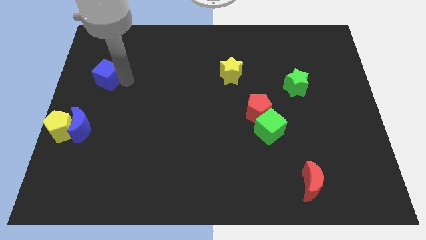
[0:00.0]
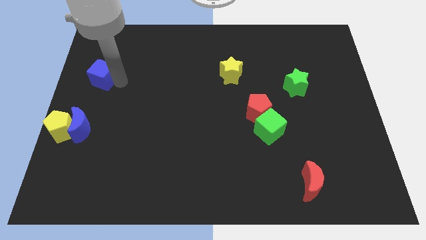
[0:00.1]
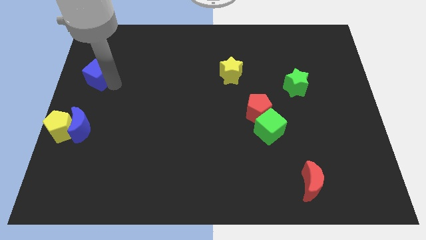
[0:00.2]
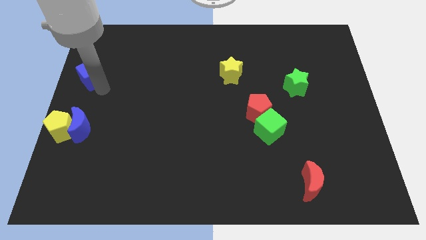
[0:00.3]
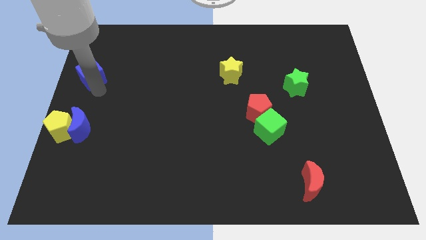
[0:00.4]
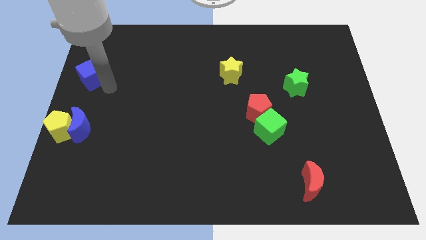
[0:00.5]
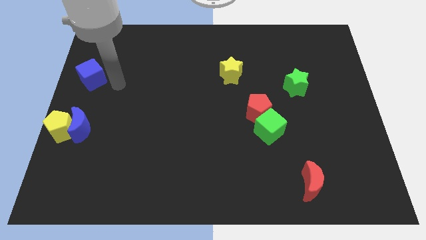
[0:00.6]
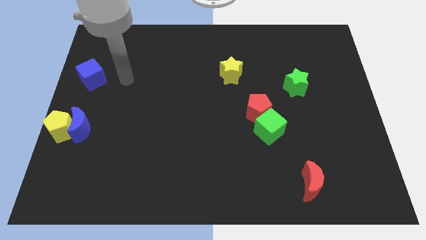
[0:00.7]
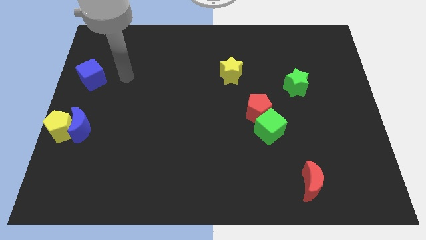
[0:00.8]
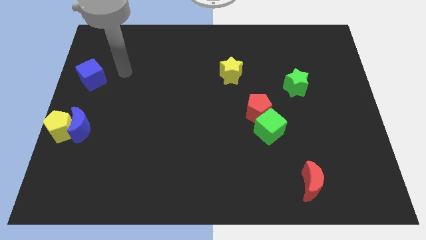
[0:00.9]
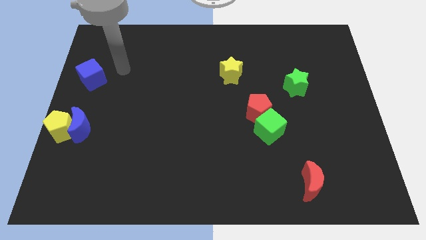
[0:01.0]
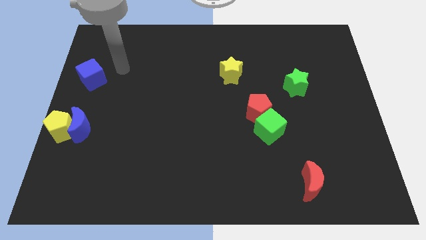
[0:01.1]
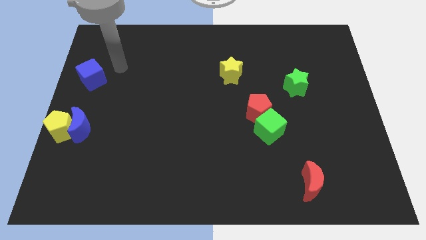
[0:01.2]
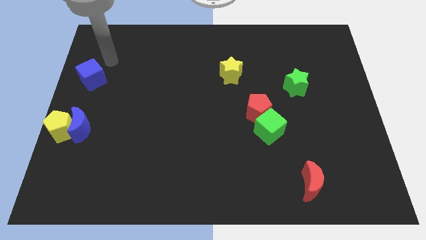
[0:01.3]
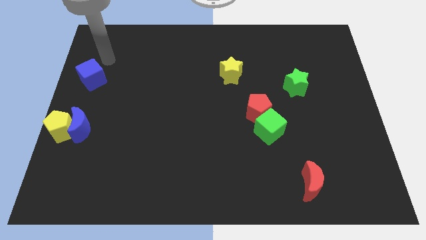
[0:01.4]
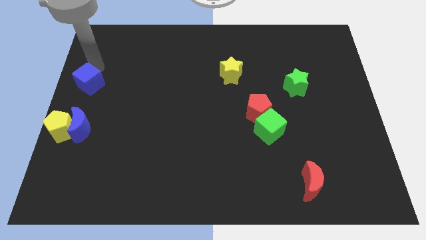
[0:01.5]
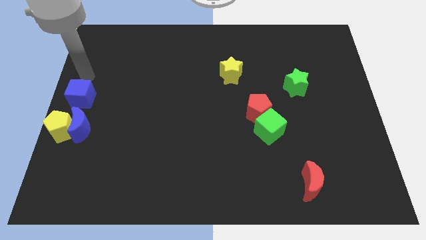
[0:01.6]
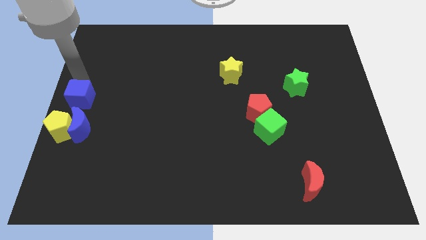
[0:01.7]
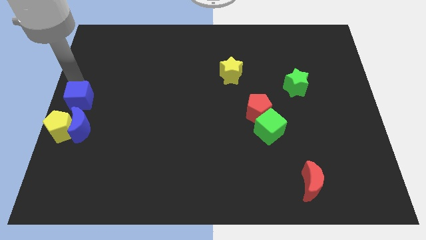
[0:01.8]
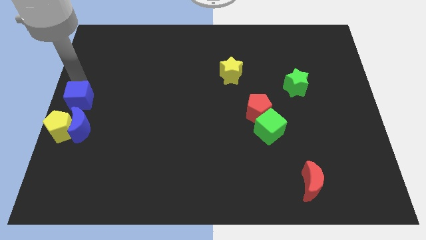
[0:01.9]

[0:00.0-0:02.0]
put the blue cube to the top side of the blue crescent

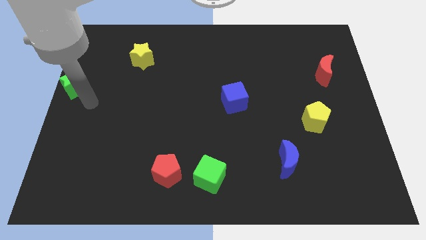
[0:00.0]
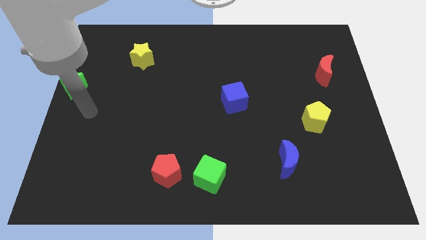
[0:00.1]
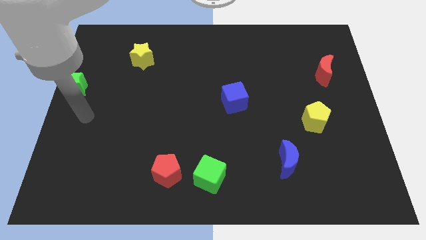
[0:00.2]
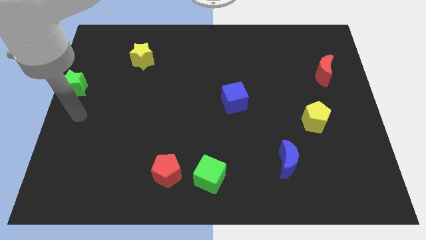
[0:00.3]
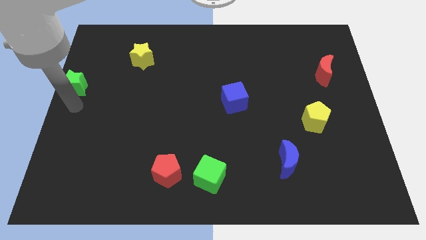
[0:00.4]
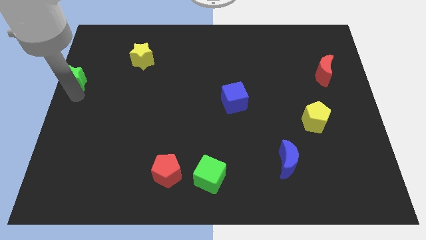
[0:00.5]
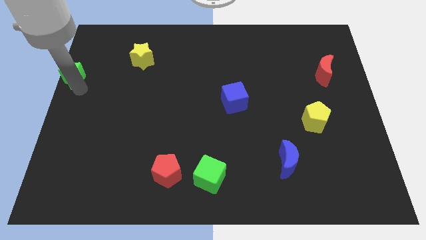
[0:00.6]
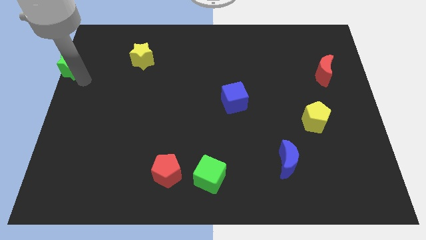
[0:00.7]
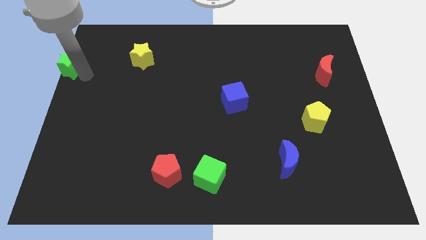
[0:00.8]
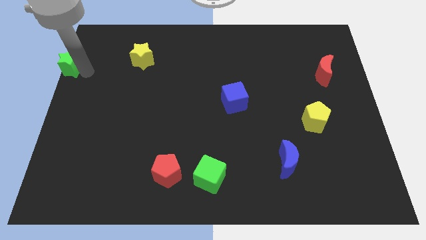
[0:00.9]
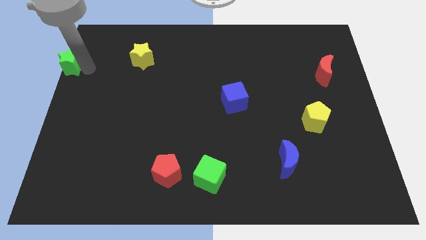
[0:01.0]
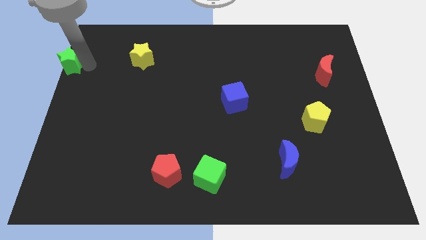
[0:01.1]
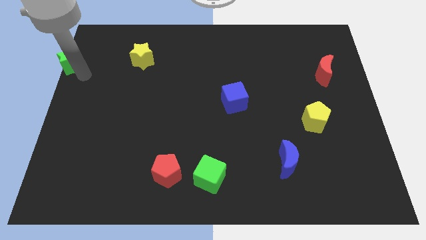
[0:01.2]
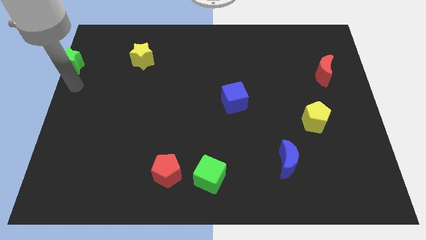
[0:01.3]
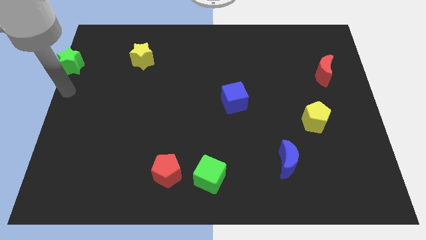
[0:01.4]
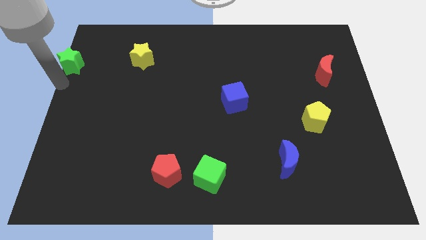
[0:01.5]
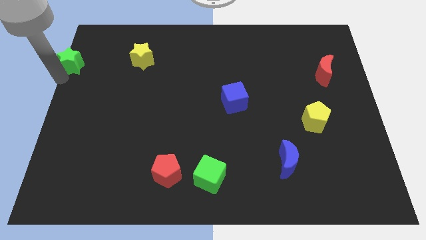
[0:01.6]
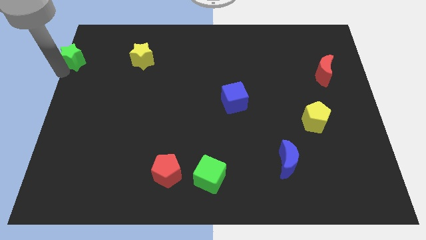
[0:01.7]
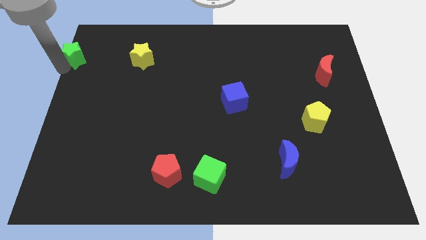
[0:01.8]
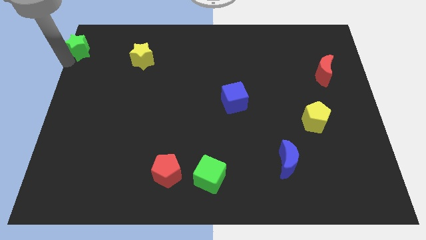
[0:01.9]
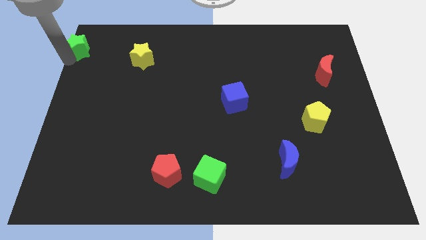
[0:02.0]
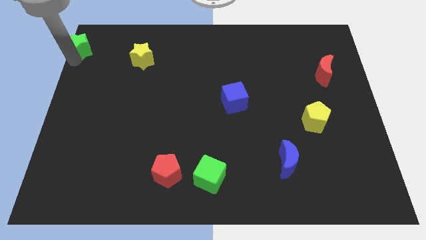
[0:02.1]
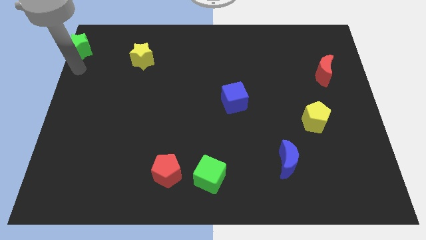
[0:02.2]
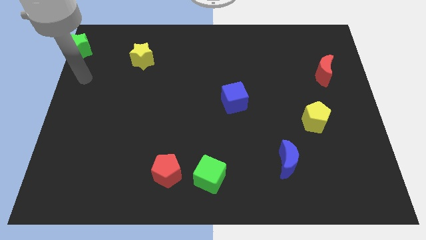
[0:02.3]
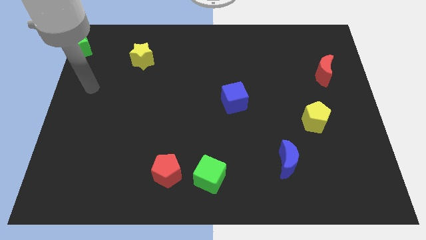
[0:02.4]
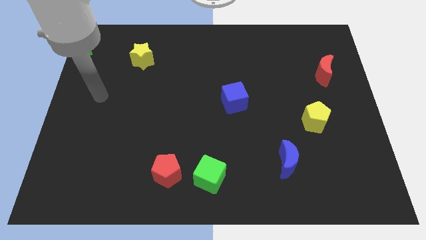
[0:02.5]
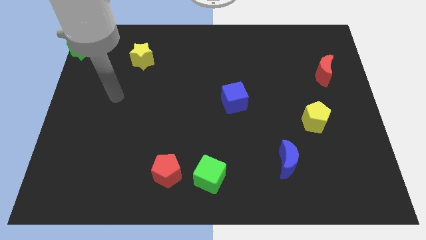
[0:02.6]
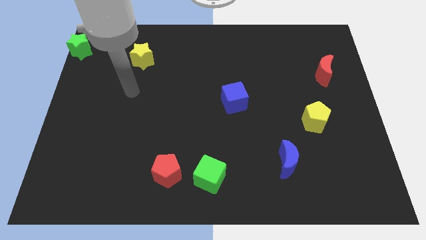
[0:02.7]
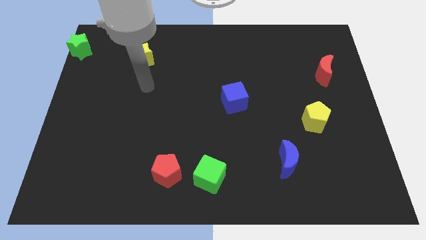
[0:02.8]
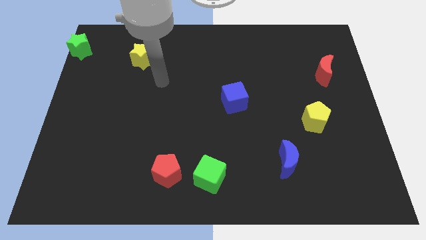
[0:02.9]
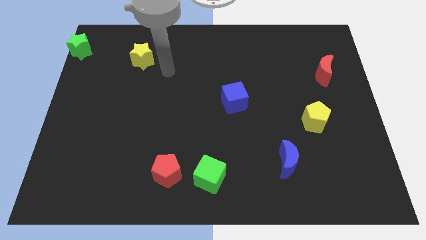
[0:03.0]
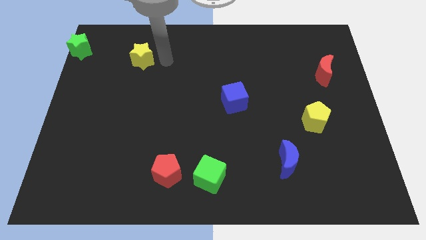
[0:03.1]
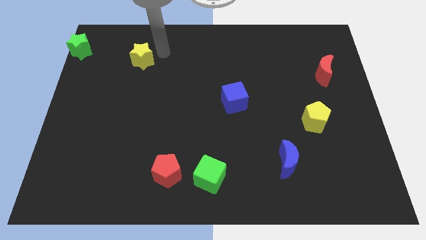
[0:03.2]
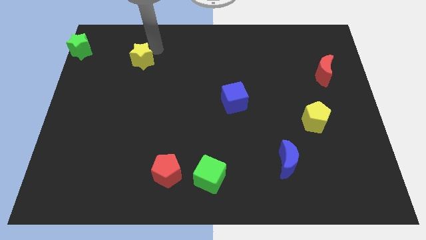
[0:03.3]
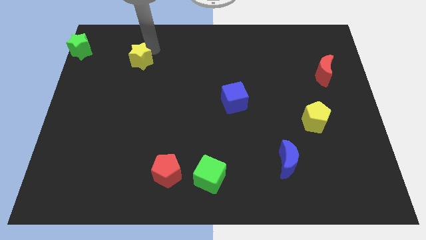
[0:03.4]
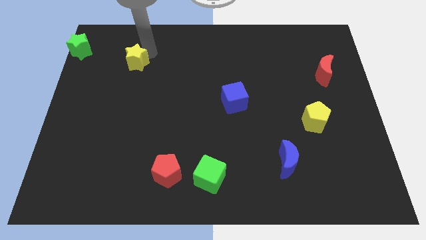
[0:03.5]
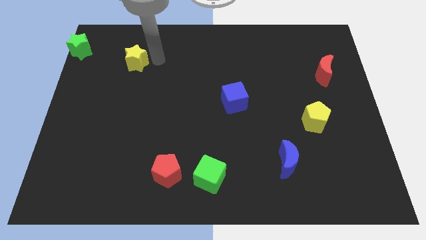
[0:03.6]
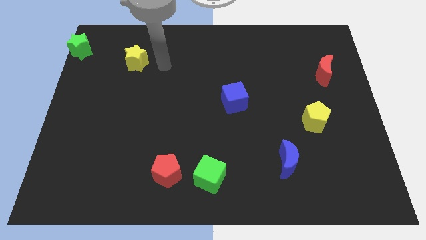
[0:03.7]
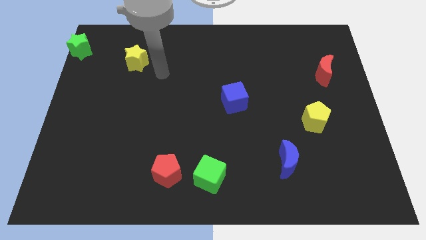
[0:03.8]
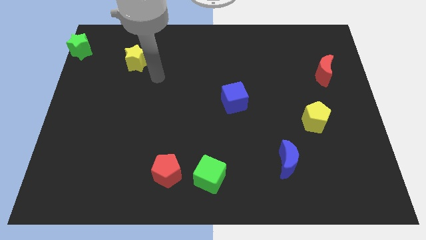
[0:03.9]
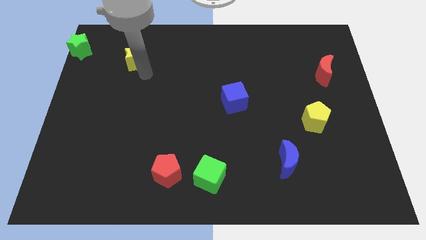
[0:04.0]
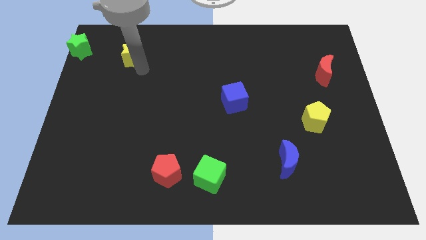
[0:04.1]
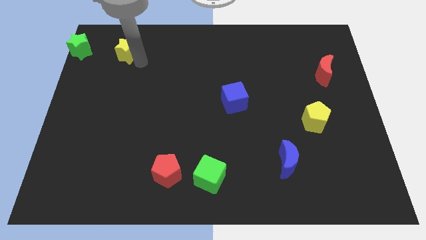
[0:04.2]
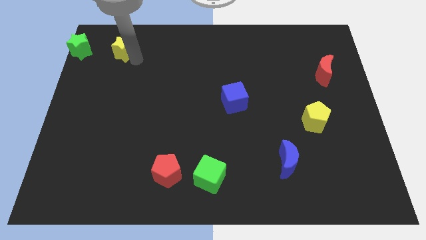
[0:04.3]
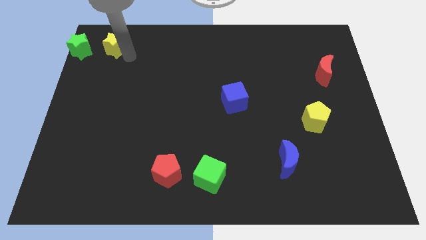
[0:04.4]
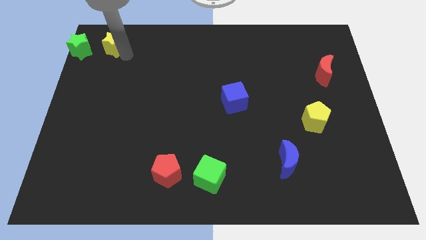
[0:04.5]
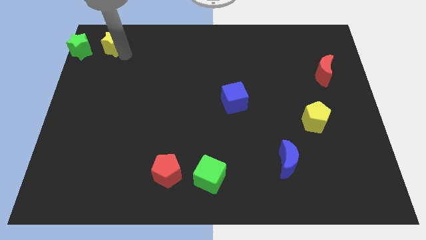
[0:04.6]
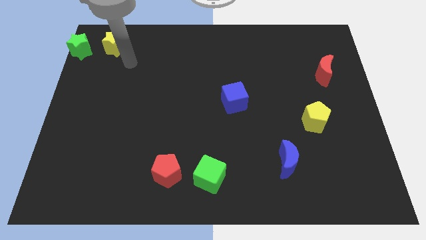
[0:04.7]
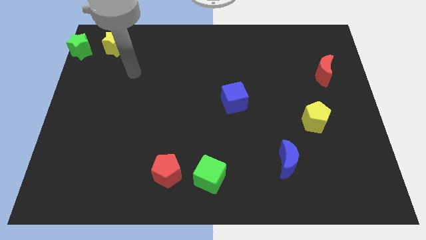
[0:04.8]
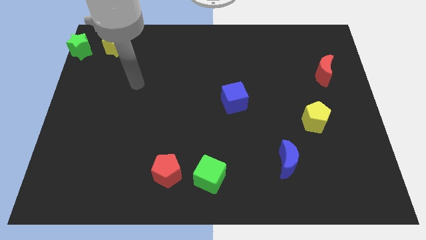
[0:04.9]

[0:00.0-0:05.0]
move the yellow star to the right to the green star

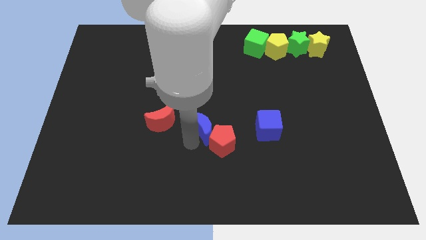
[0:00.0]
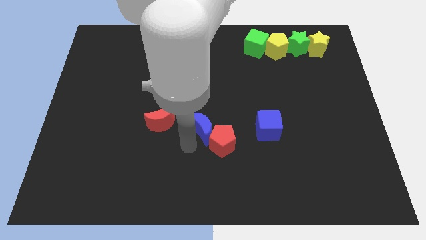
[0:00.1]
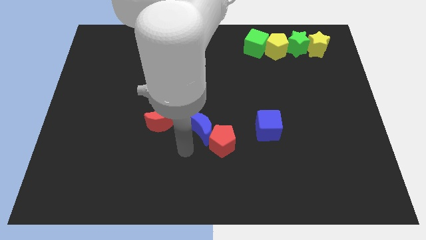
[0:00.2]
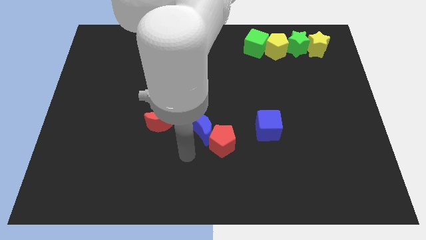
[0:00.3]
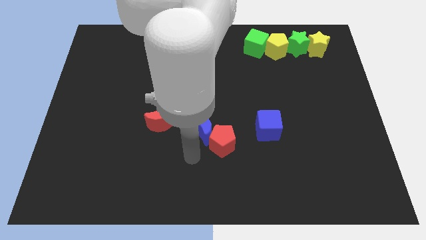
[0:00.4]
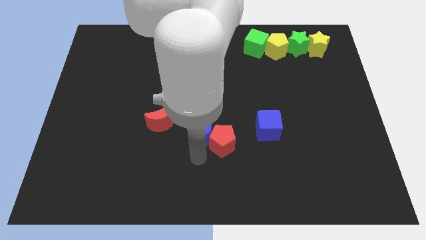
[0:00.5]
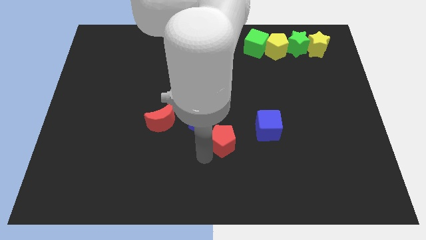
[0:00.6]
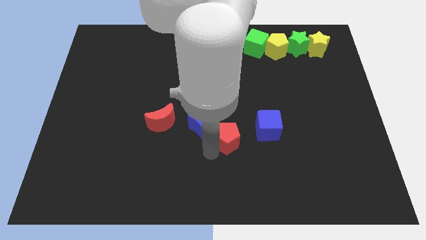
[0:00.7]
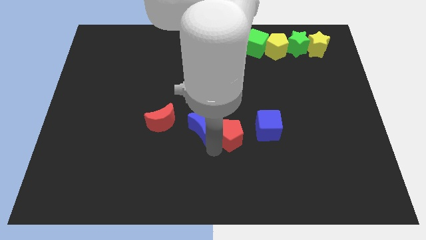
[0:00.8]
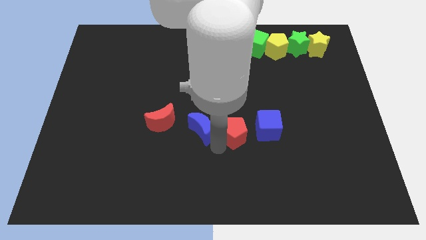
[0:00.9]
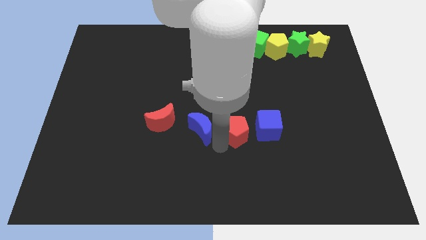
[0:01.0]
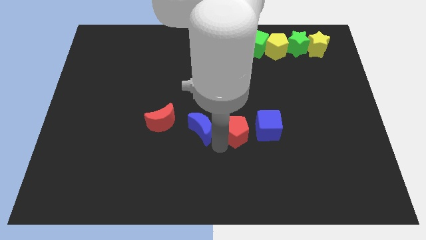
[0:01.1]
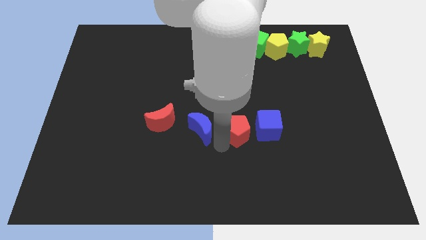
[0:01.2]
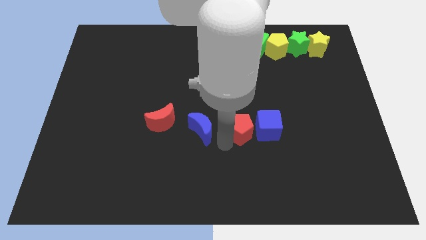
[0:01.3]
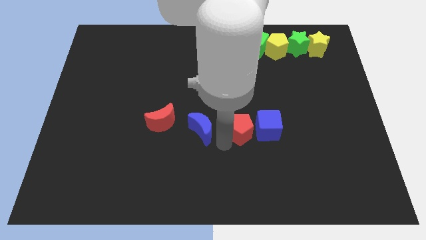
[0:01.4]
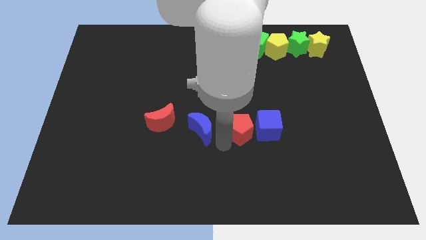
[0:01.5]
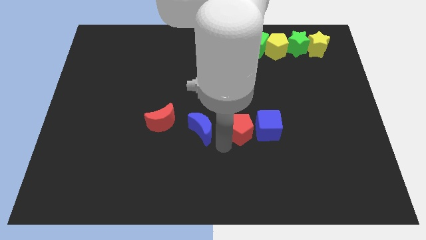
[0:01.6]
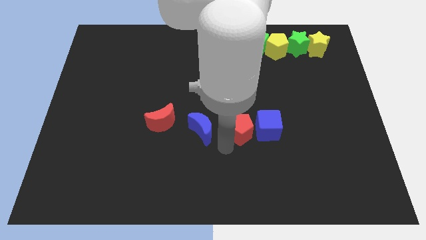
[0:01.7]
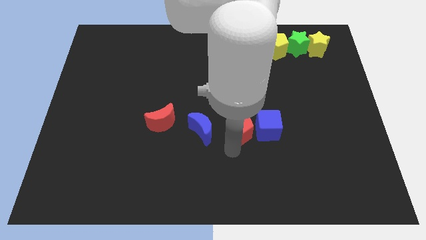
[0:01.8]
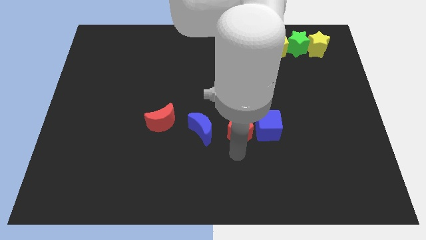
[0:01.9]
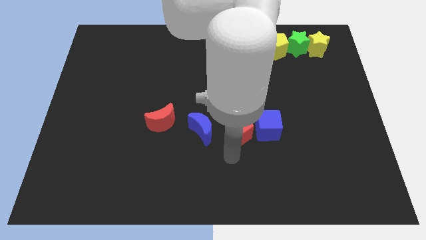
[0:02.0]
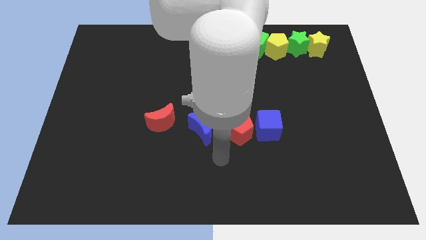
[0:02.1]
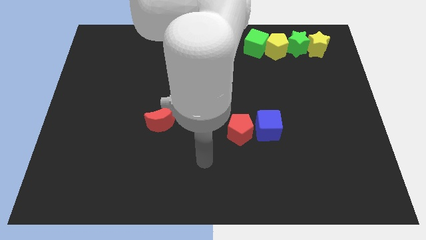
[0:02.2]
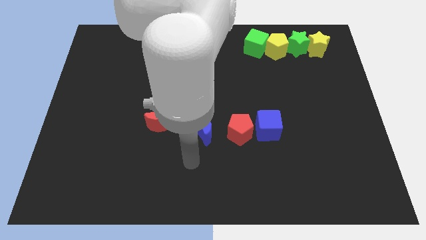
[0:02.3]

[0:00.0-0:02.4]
place red pentagon in between blue moon and blue cube
